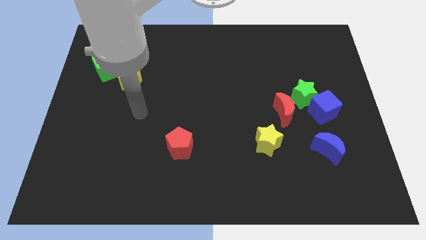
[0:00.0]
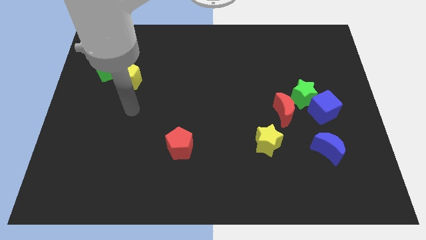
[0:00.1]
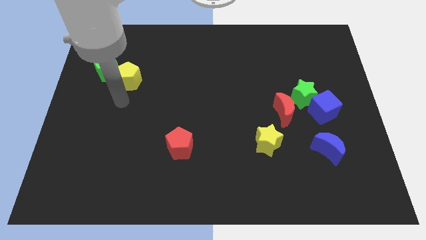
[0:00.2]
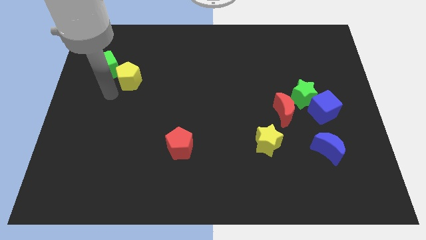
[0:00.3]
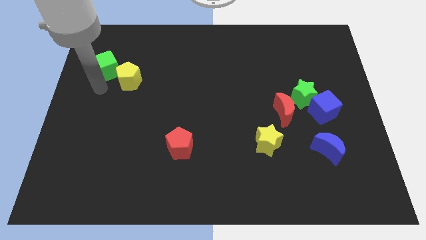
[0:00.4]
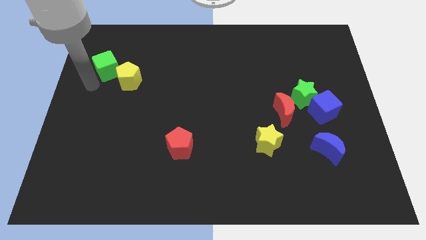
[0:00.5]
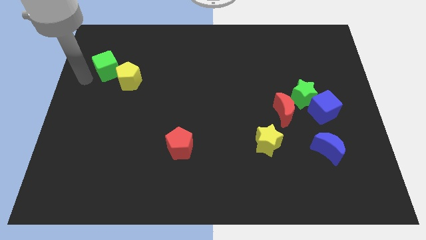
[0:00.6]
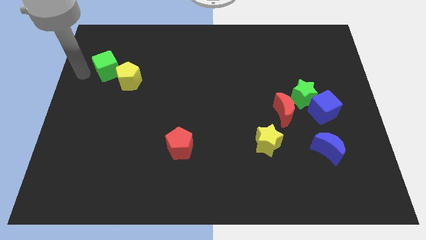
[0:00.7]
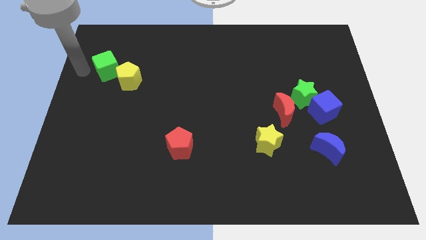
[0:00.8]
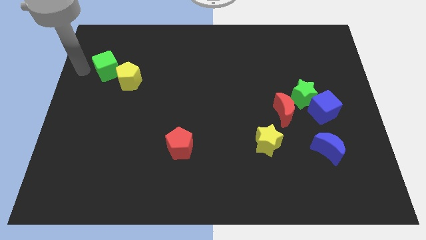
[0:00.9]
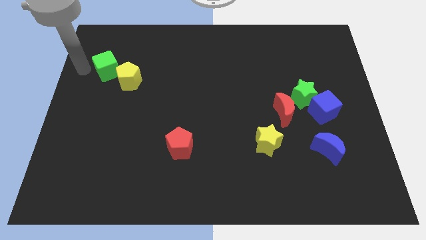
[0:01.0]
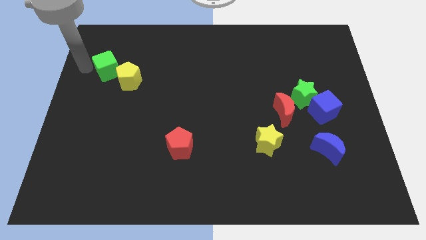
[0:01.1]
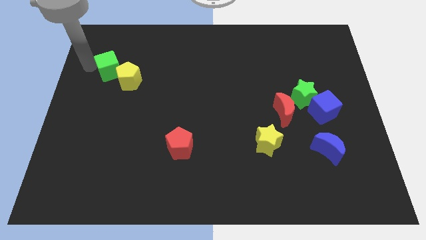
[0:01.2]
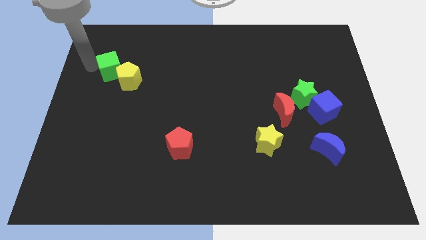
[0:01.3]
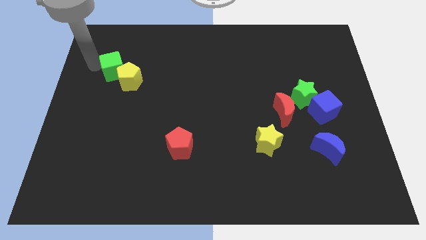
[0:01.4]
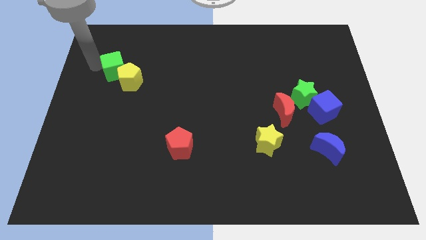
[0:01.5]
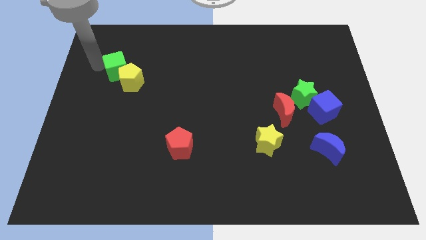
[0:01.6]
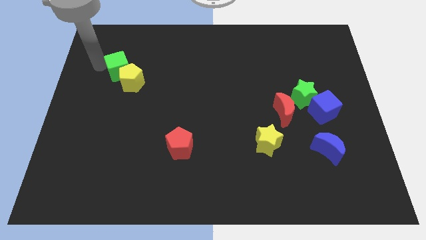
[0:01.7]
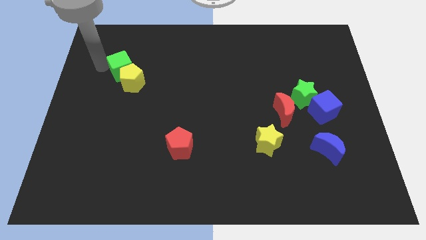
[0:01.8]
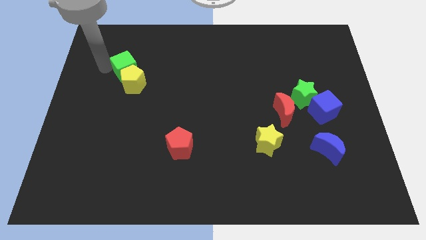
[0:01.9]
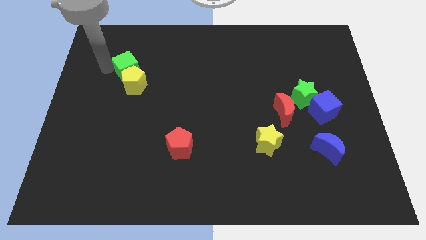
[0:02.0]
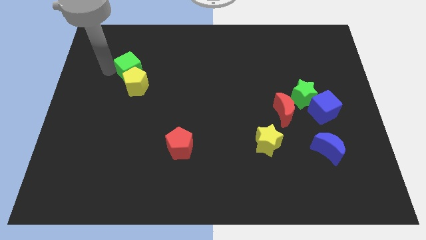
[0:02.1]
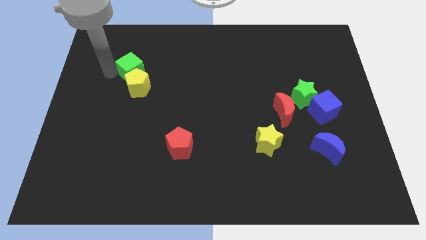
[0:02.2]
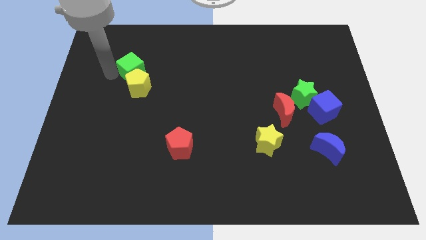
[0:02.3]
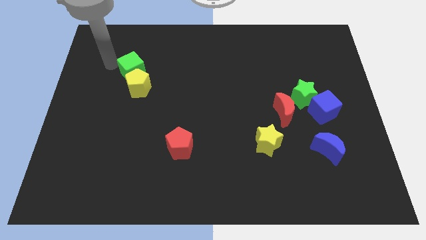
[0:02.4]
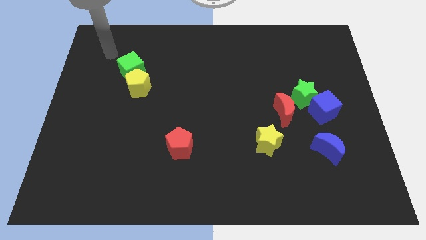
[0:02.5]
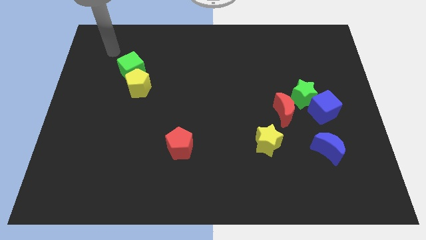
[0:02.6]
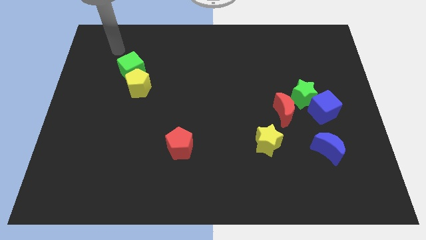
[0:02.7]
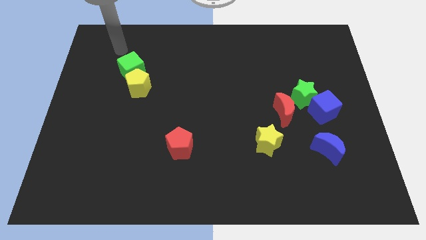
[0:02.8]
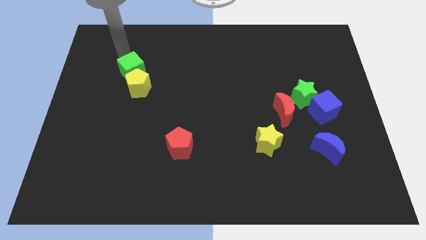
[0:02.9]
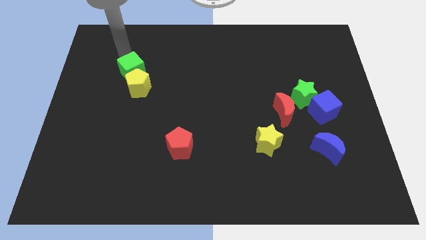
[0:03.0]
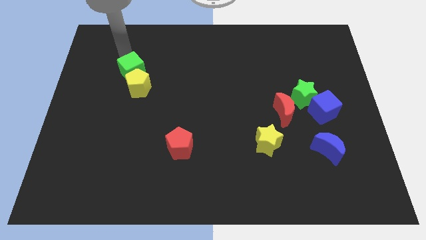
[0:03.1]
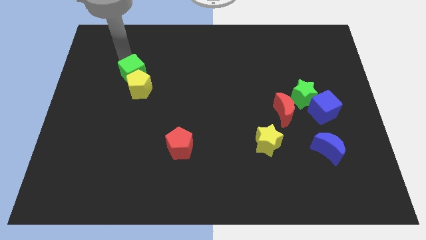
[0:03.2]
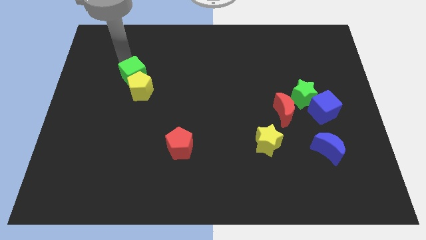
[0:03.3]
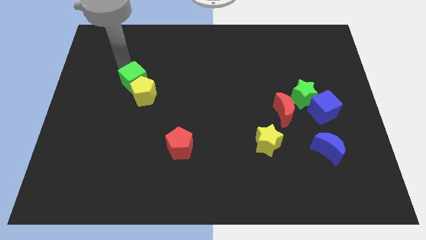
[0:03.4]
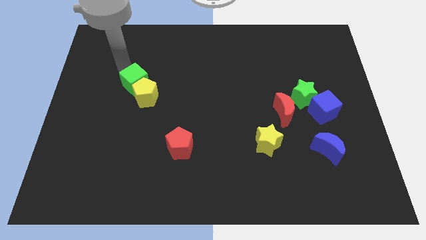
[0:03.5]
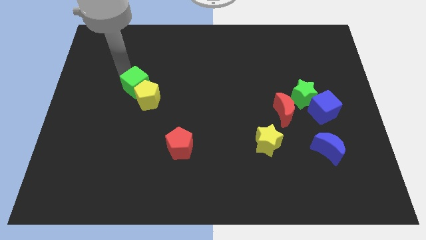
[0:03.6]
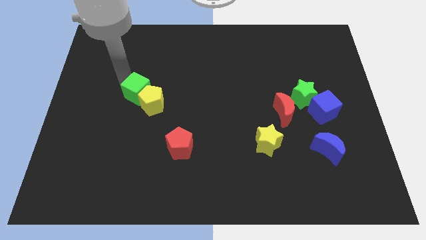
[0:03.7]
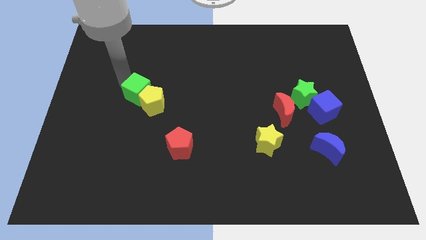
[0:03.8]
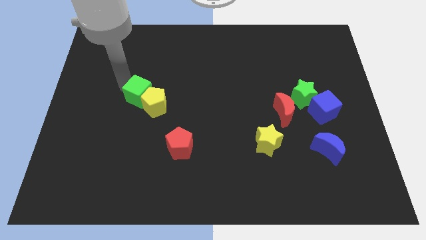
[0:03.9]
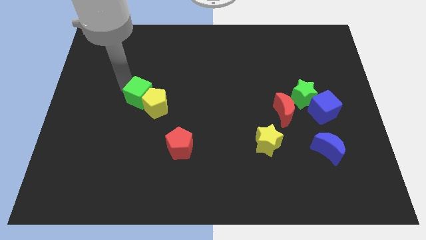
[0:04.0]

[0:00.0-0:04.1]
push the green cube and yellow pentagon towards red pentagon

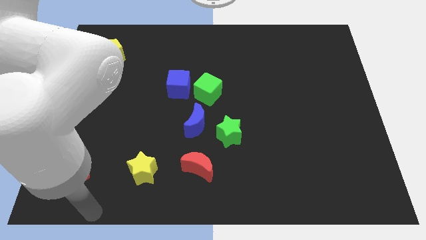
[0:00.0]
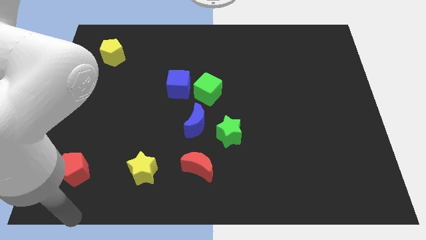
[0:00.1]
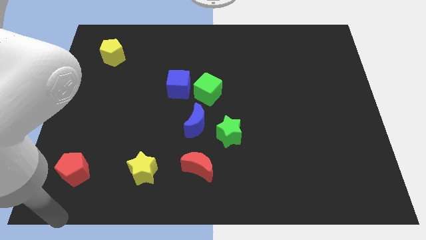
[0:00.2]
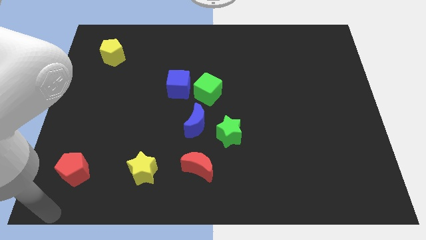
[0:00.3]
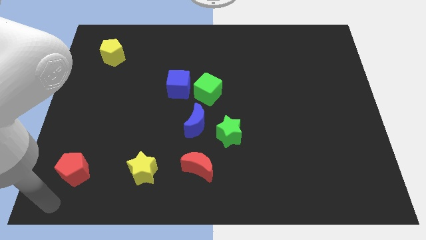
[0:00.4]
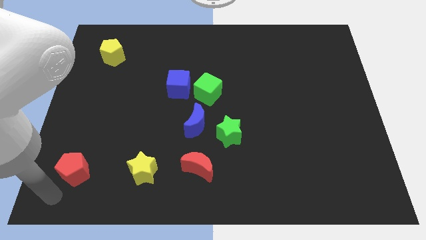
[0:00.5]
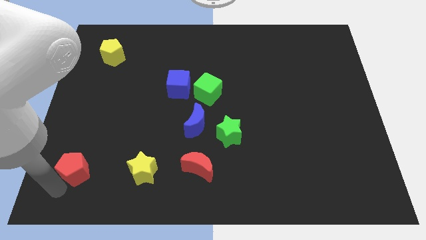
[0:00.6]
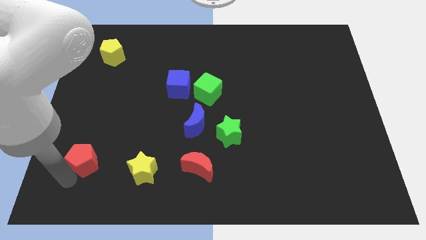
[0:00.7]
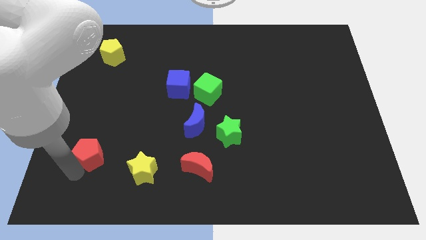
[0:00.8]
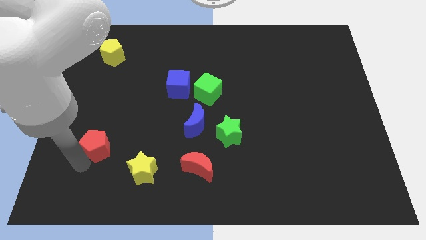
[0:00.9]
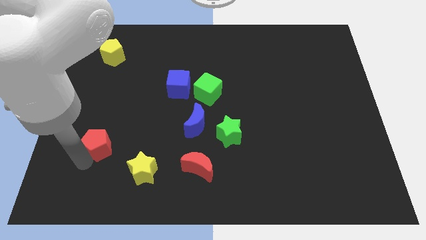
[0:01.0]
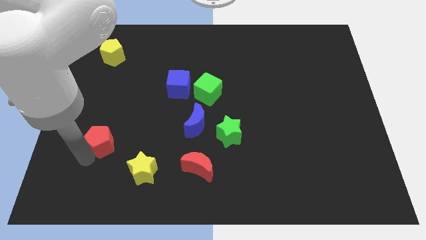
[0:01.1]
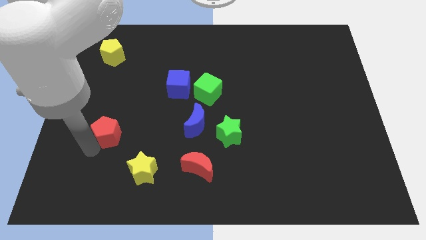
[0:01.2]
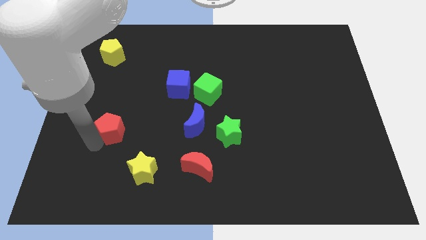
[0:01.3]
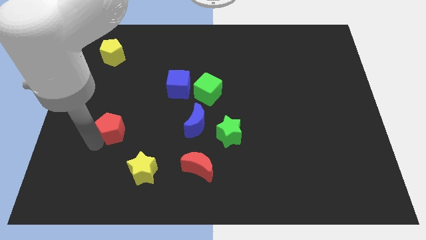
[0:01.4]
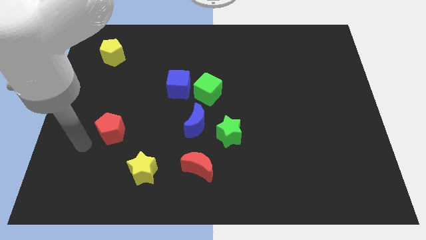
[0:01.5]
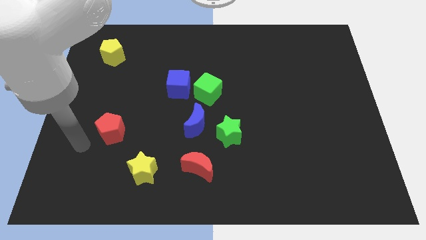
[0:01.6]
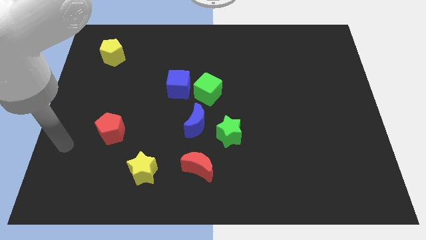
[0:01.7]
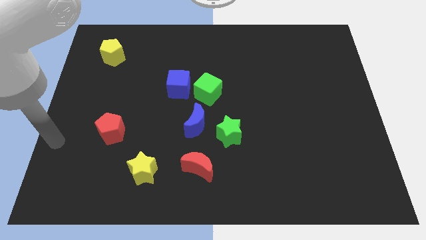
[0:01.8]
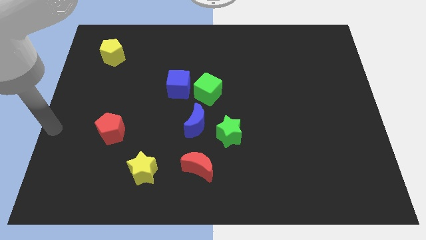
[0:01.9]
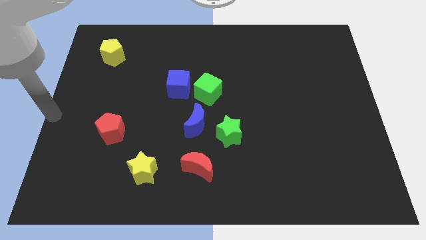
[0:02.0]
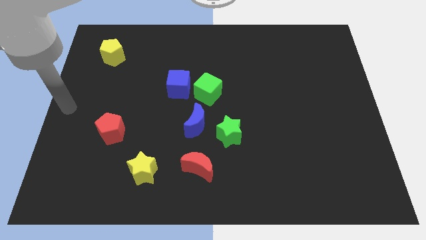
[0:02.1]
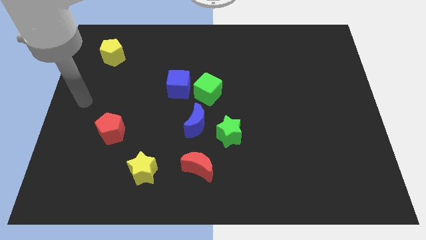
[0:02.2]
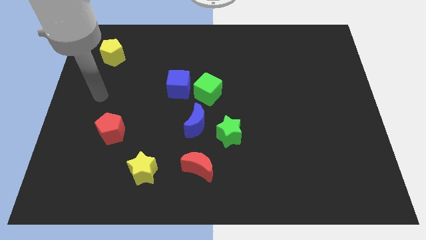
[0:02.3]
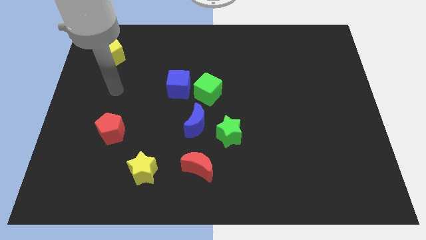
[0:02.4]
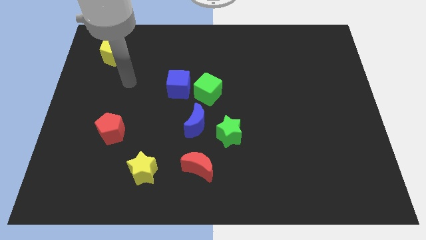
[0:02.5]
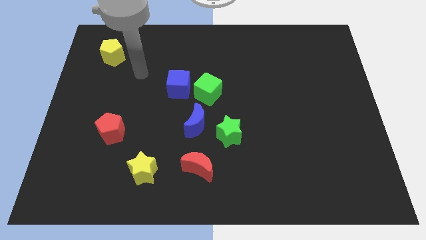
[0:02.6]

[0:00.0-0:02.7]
move the red pentagon towards the left center

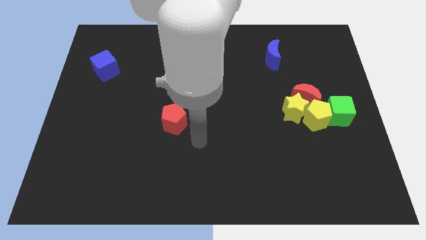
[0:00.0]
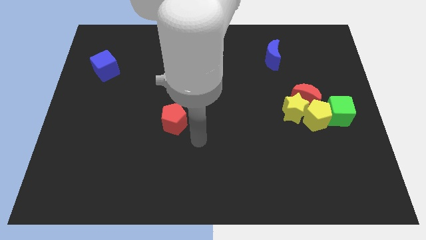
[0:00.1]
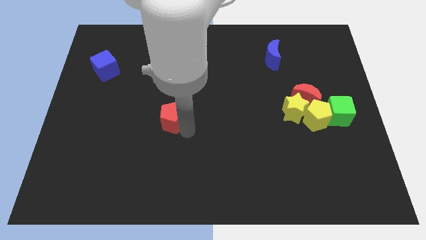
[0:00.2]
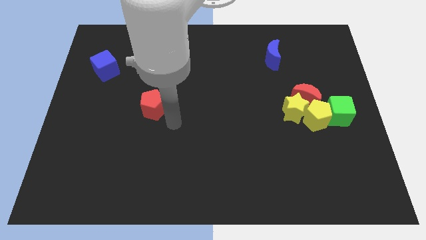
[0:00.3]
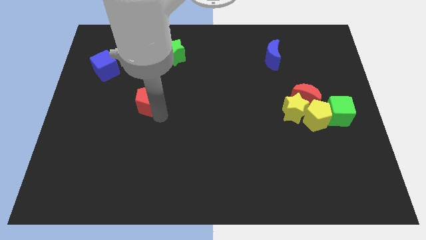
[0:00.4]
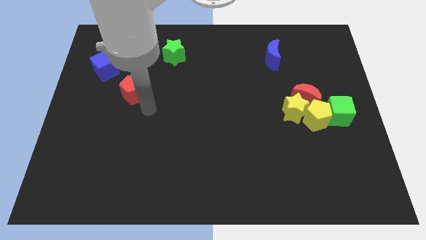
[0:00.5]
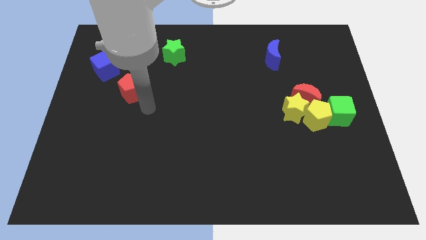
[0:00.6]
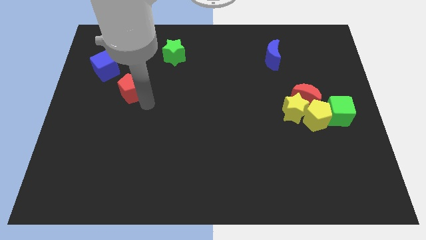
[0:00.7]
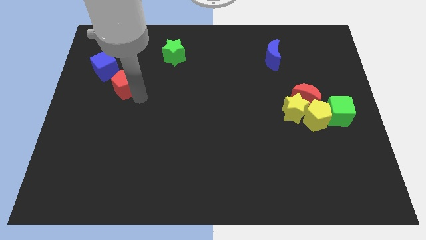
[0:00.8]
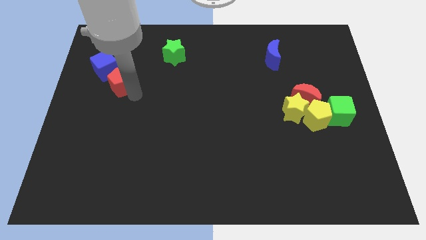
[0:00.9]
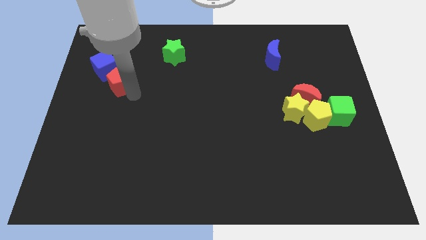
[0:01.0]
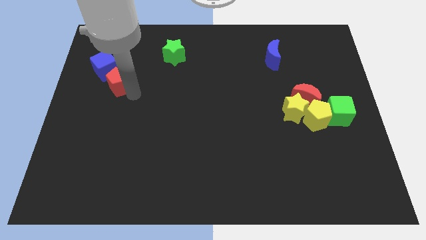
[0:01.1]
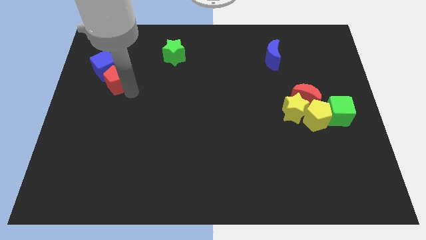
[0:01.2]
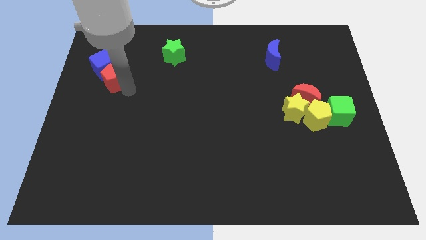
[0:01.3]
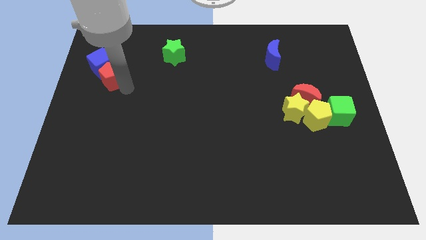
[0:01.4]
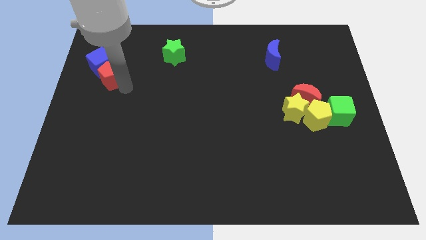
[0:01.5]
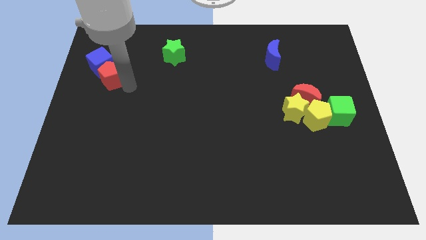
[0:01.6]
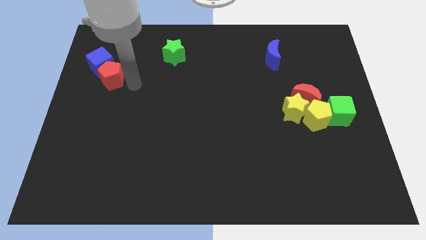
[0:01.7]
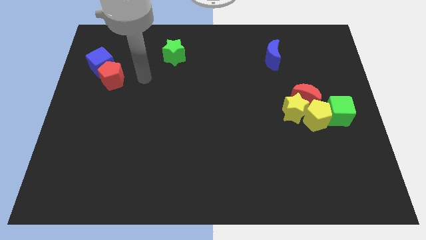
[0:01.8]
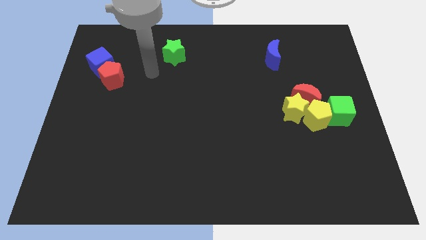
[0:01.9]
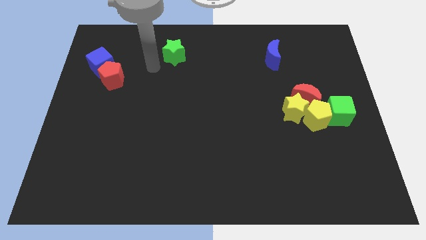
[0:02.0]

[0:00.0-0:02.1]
push red pentagon into blue cube
